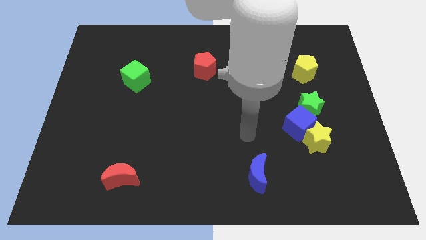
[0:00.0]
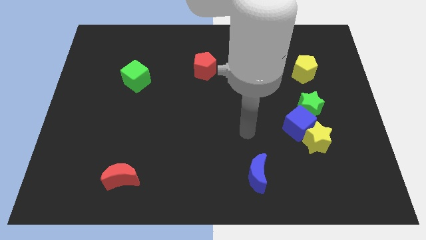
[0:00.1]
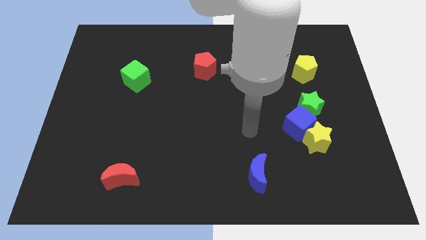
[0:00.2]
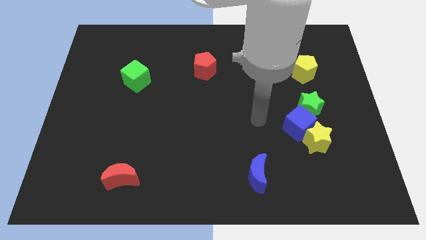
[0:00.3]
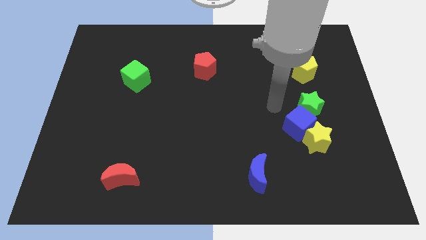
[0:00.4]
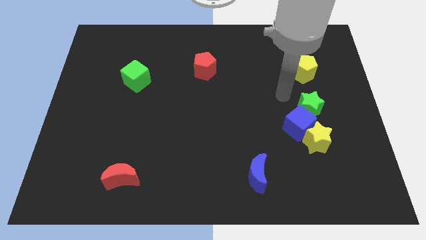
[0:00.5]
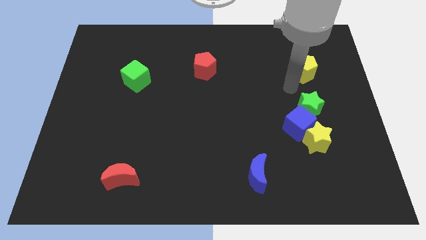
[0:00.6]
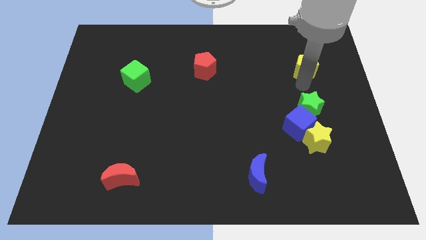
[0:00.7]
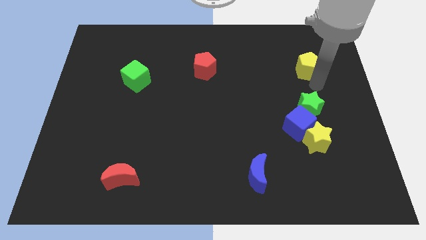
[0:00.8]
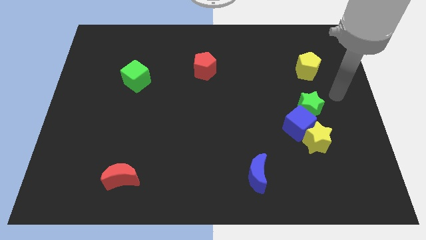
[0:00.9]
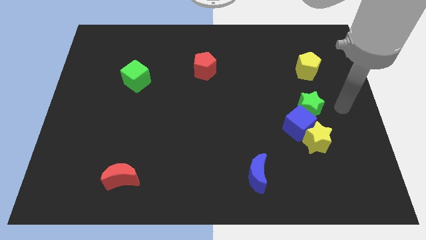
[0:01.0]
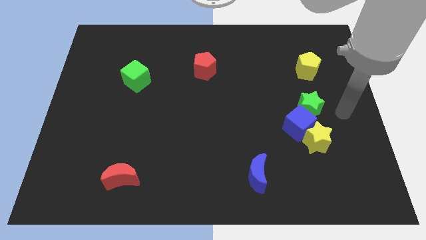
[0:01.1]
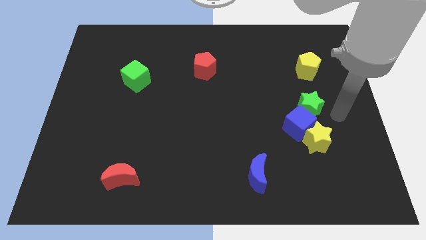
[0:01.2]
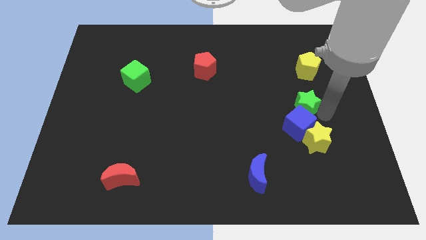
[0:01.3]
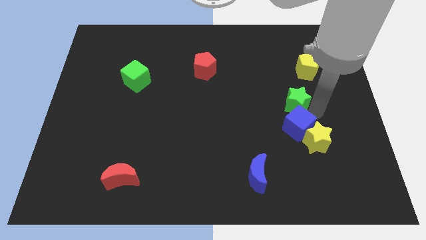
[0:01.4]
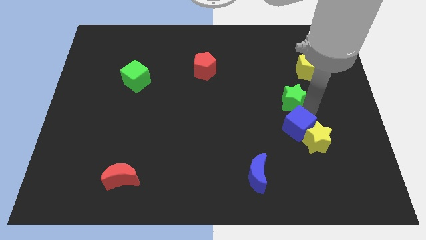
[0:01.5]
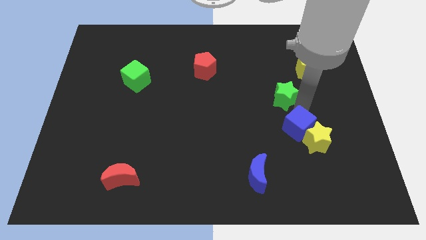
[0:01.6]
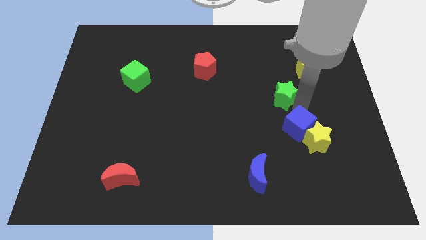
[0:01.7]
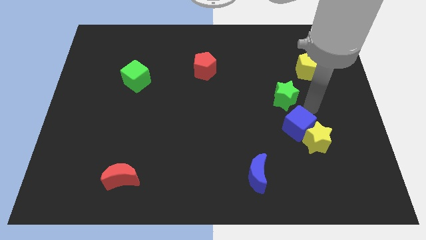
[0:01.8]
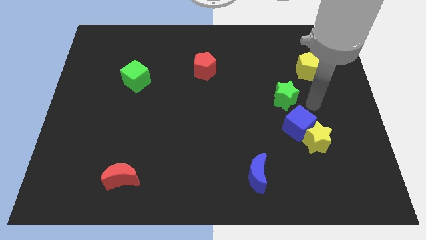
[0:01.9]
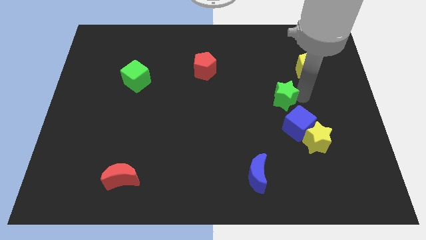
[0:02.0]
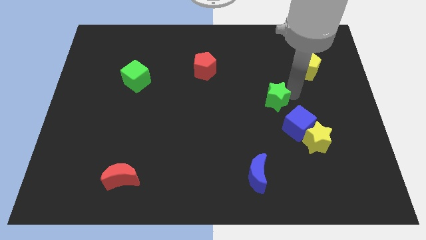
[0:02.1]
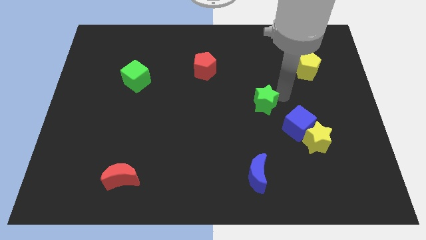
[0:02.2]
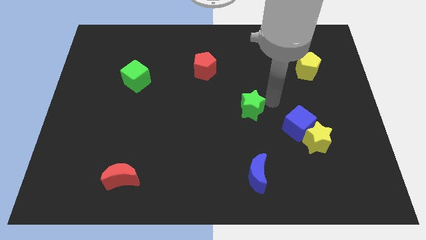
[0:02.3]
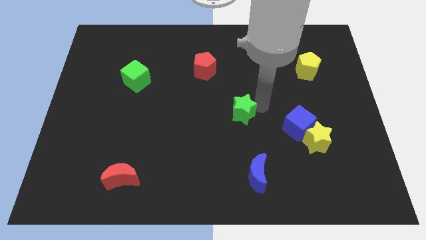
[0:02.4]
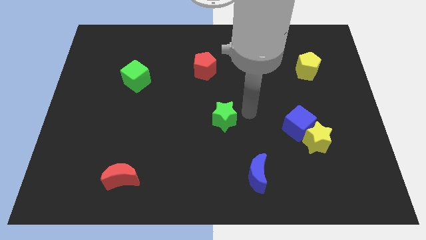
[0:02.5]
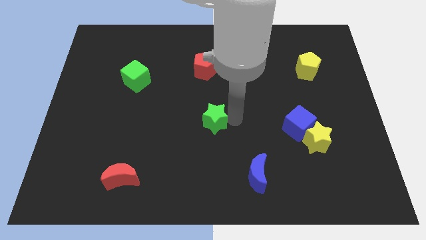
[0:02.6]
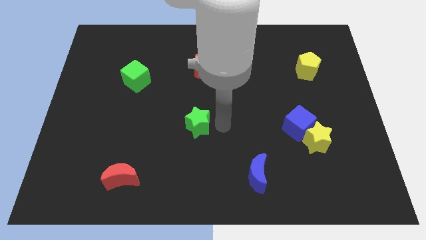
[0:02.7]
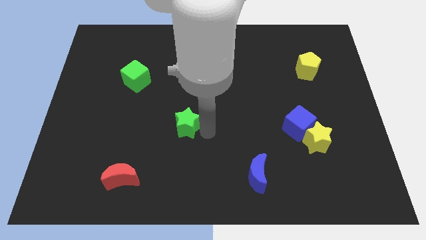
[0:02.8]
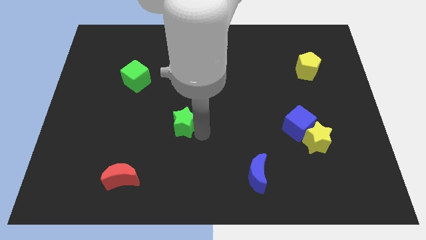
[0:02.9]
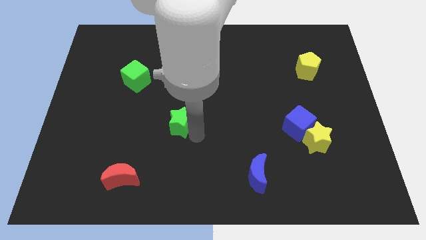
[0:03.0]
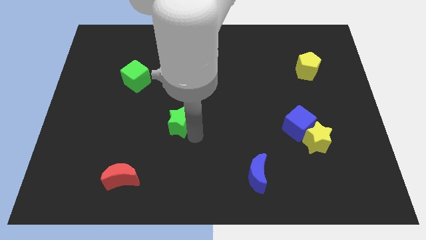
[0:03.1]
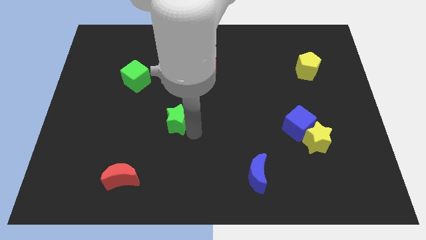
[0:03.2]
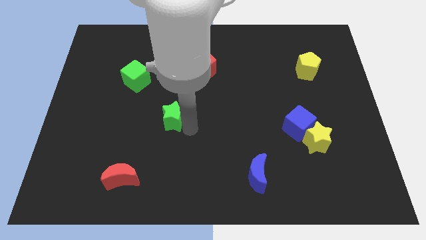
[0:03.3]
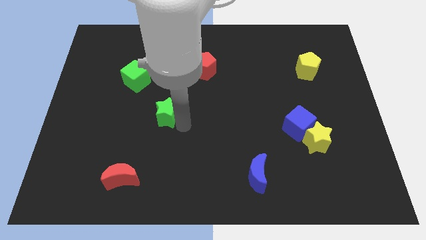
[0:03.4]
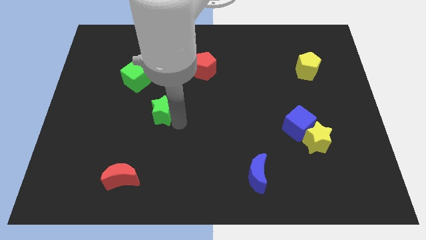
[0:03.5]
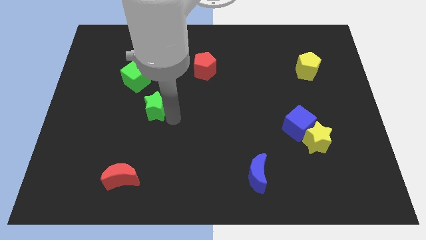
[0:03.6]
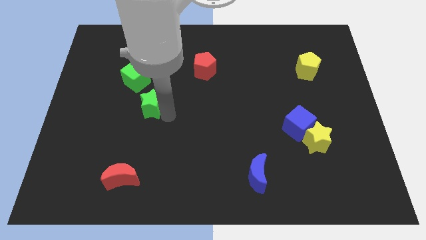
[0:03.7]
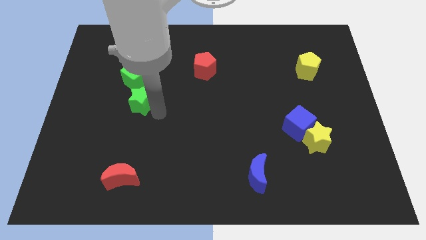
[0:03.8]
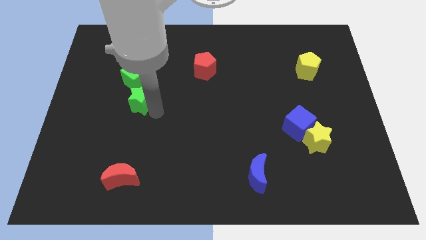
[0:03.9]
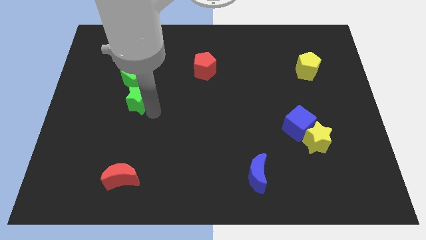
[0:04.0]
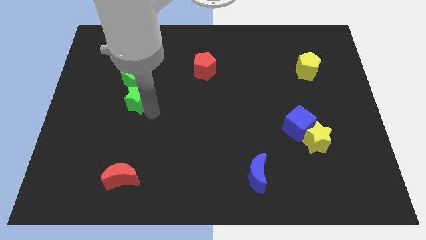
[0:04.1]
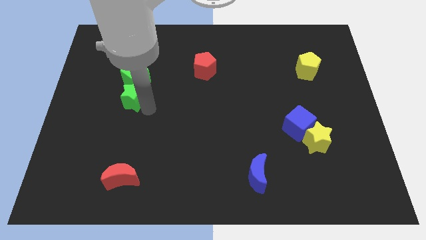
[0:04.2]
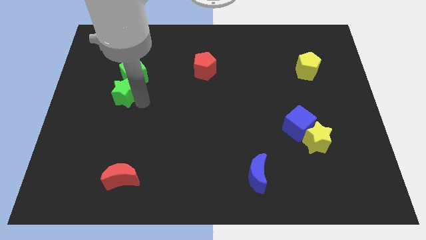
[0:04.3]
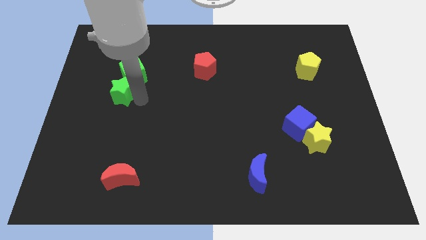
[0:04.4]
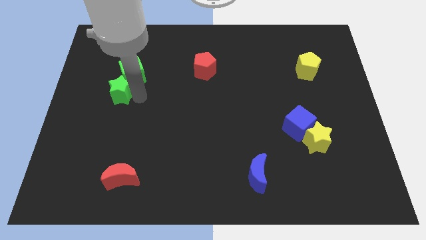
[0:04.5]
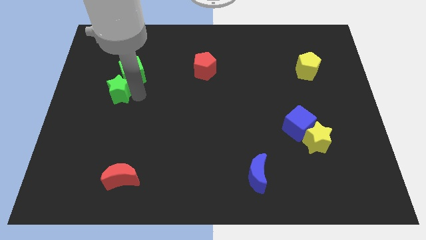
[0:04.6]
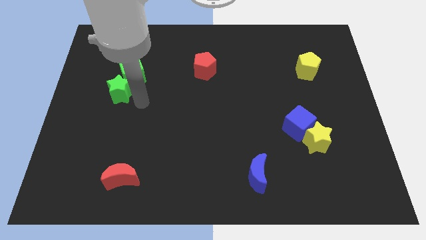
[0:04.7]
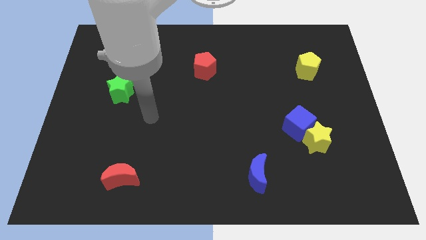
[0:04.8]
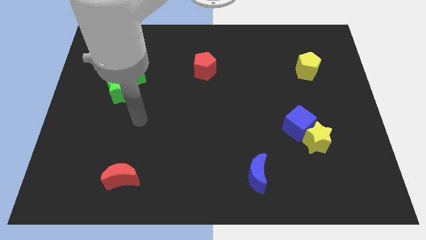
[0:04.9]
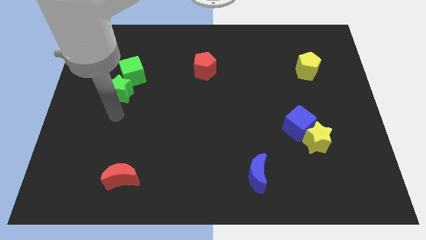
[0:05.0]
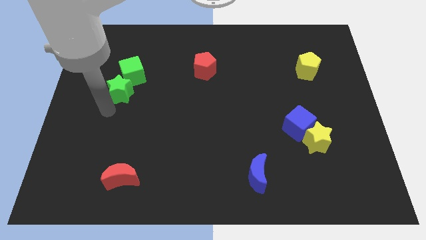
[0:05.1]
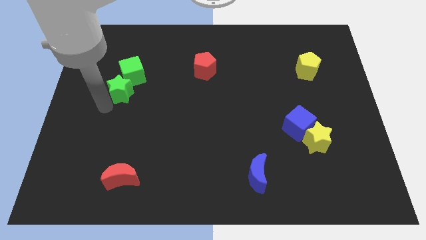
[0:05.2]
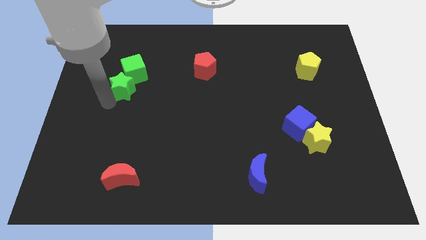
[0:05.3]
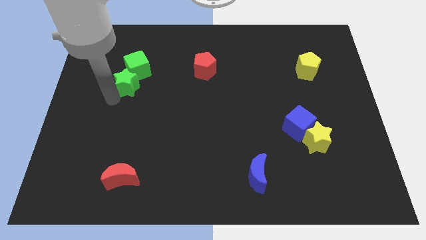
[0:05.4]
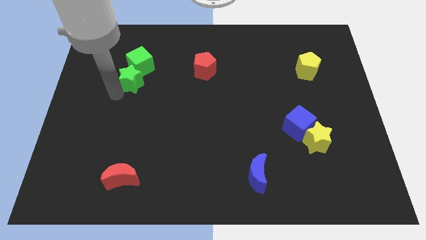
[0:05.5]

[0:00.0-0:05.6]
push the green star to the green cube

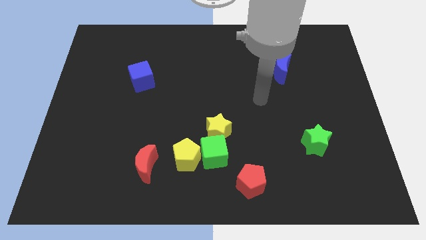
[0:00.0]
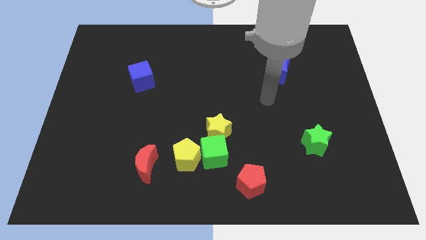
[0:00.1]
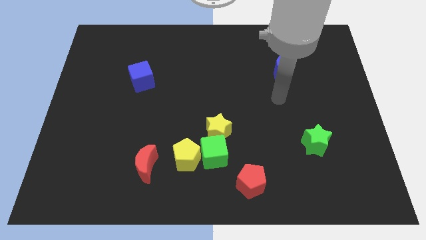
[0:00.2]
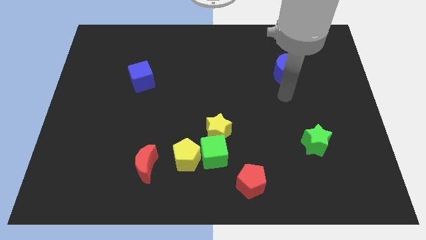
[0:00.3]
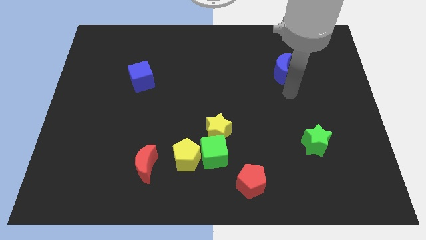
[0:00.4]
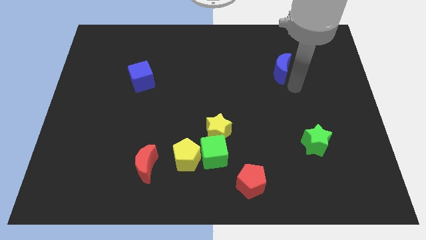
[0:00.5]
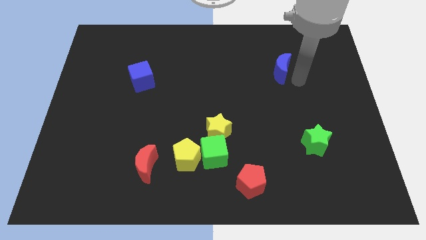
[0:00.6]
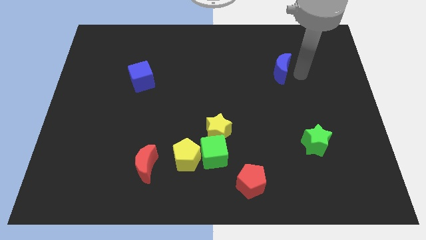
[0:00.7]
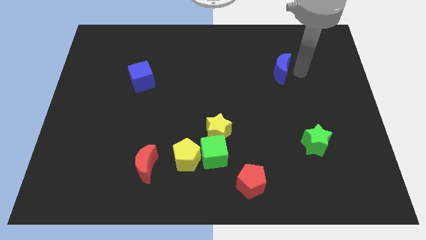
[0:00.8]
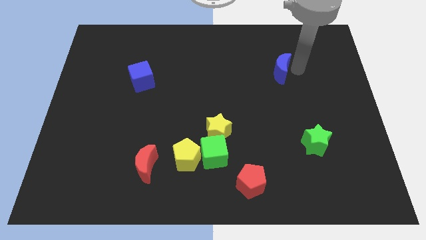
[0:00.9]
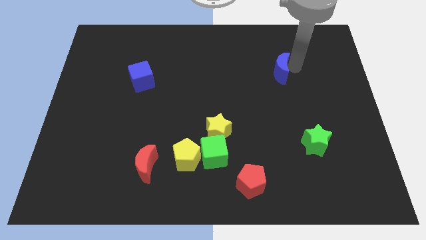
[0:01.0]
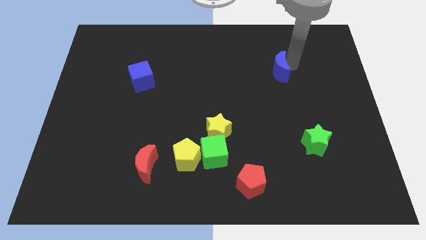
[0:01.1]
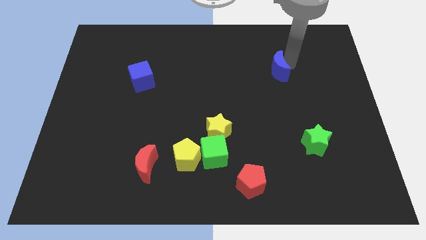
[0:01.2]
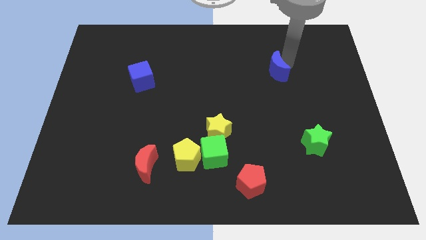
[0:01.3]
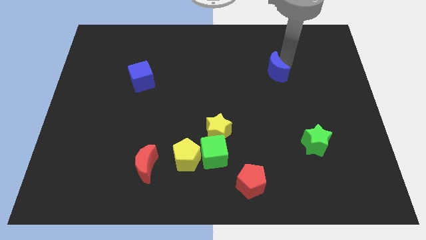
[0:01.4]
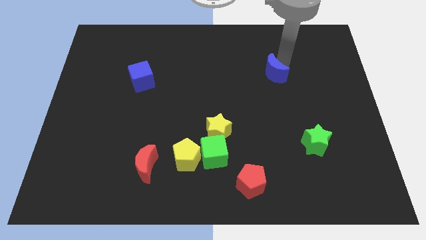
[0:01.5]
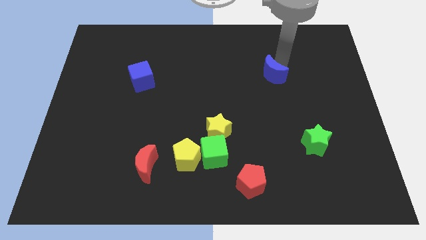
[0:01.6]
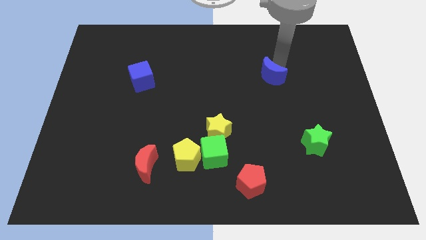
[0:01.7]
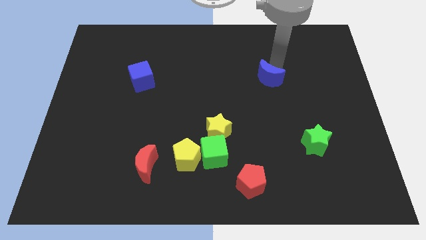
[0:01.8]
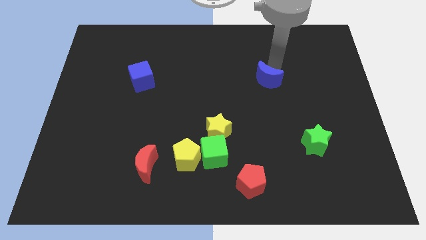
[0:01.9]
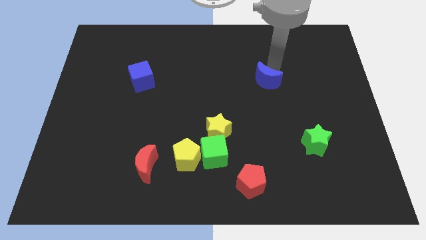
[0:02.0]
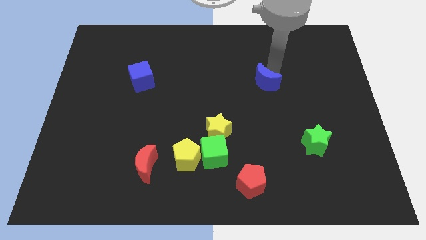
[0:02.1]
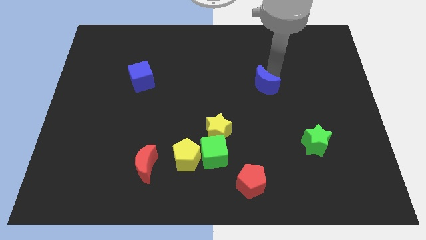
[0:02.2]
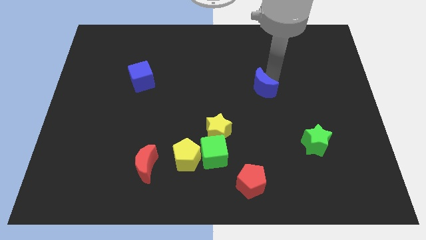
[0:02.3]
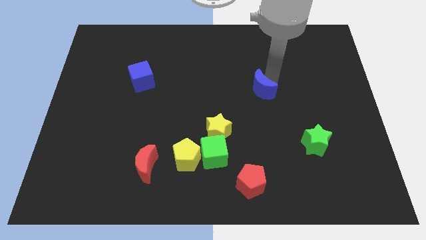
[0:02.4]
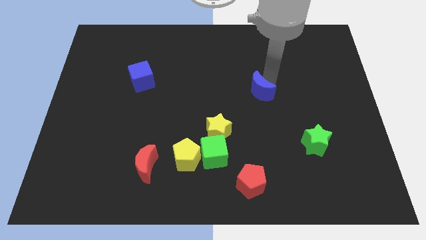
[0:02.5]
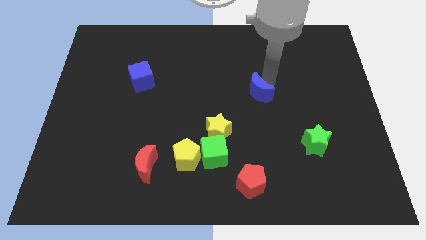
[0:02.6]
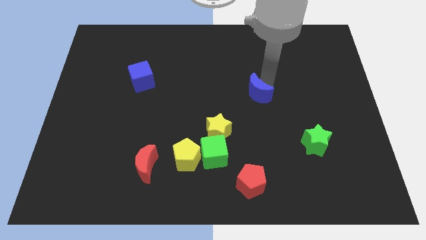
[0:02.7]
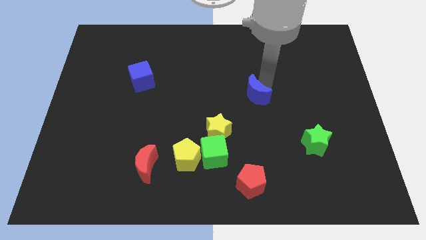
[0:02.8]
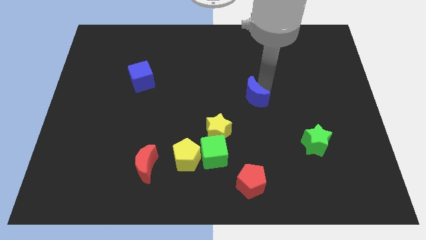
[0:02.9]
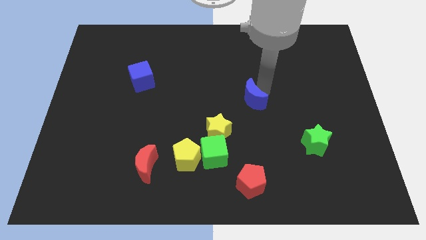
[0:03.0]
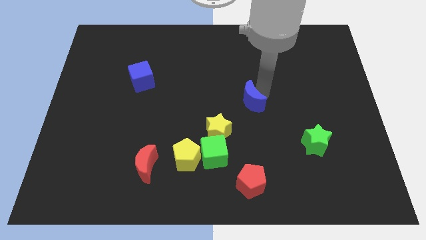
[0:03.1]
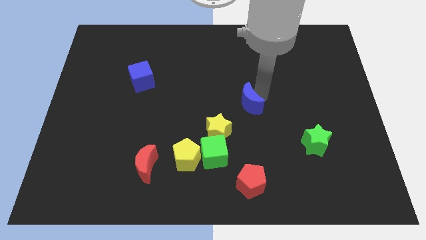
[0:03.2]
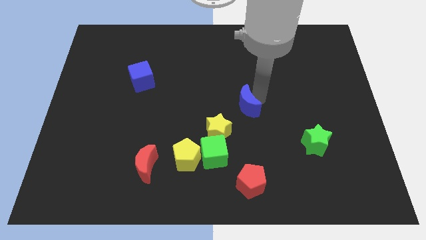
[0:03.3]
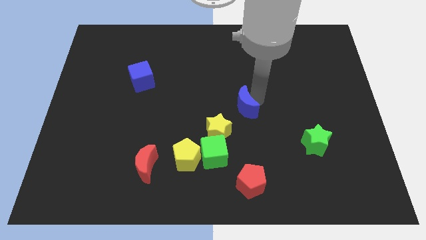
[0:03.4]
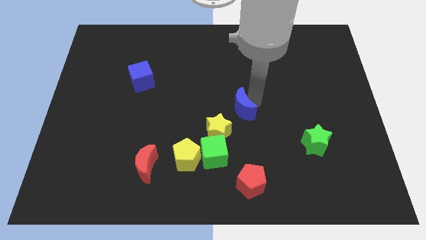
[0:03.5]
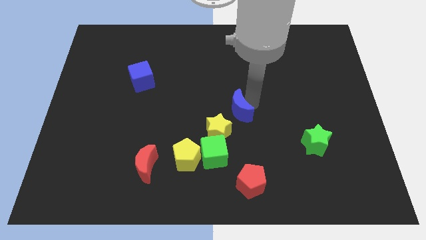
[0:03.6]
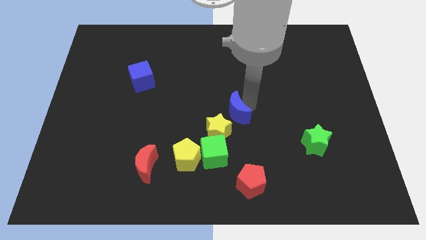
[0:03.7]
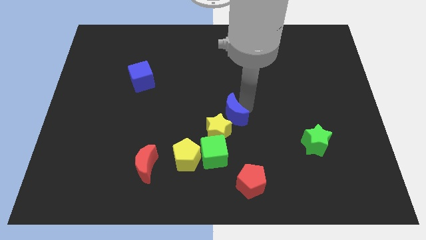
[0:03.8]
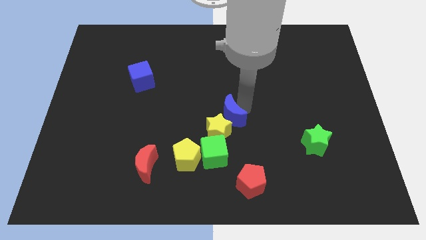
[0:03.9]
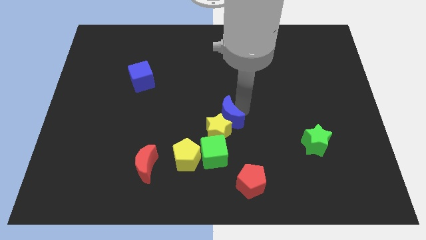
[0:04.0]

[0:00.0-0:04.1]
put the blue moon to the yellow star
